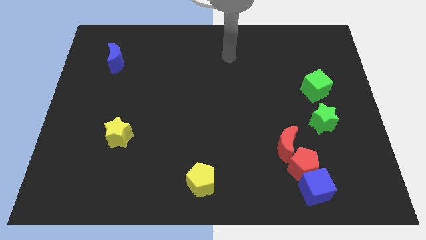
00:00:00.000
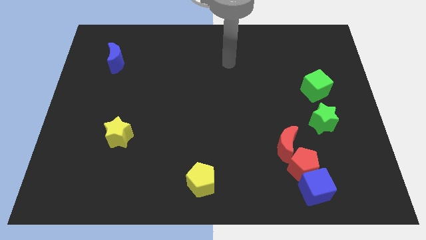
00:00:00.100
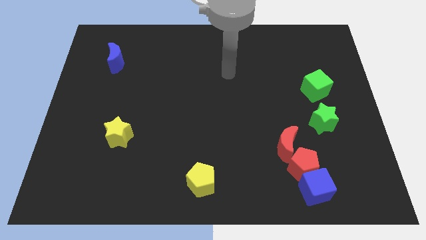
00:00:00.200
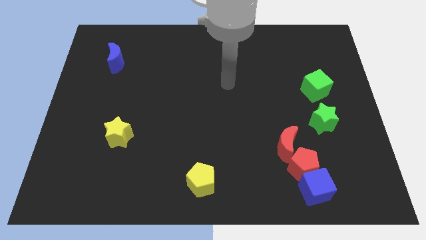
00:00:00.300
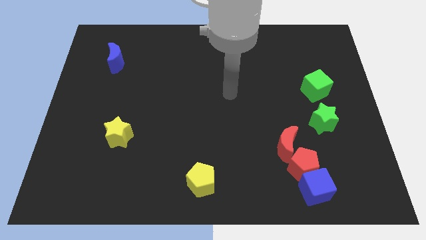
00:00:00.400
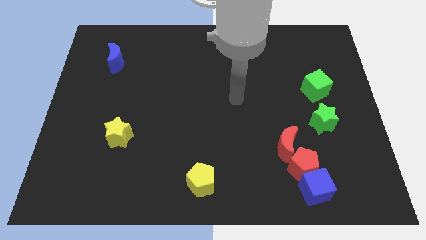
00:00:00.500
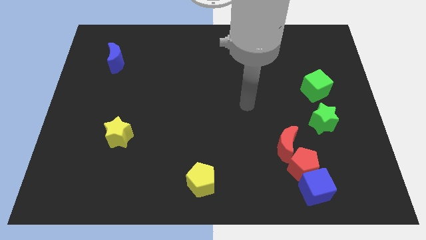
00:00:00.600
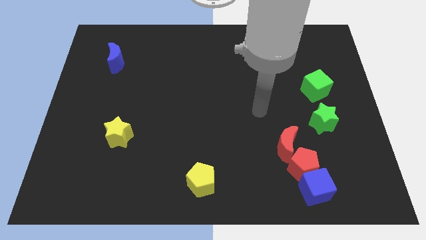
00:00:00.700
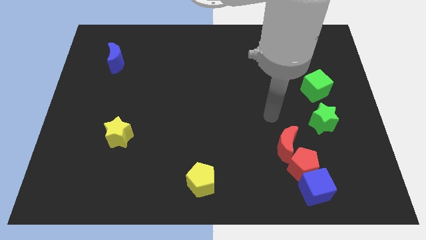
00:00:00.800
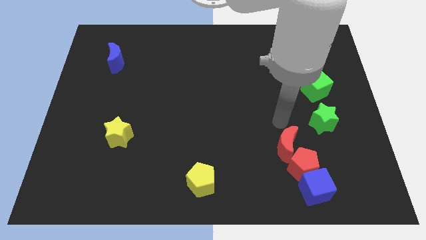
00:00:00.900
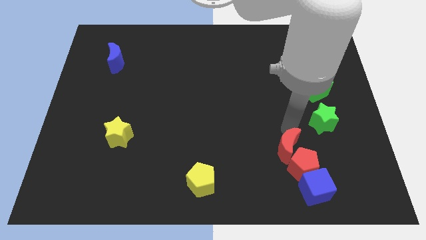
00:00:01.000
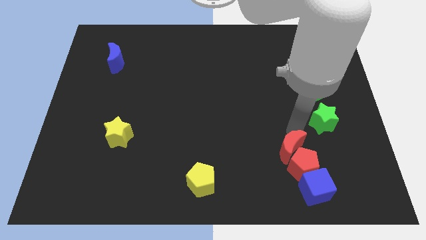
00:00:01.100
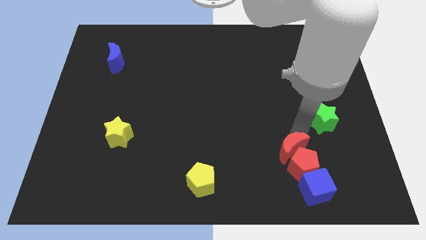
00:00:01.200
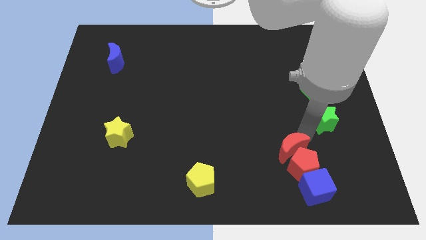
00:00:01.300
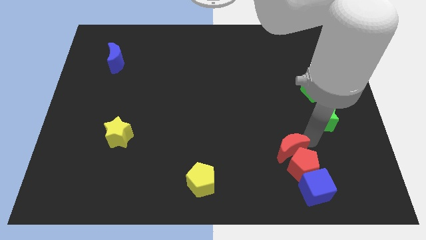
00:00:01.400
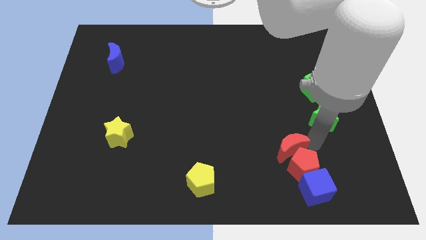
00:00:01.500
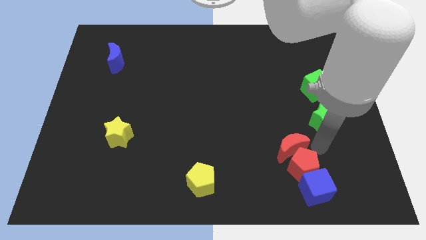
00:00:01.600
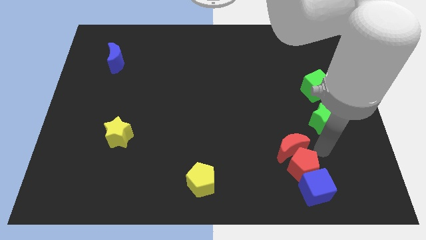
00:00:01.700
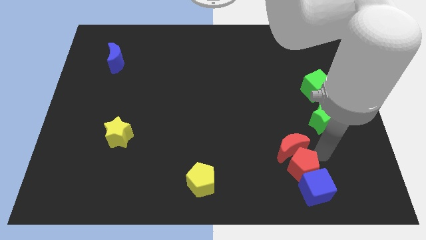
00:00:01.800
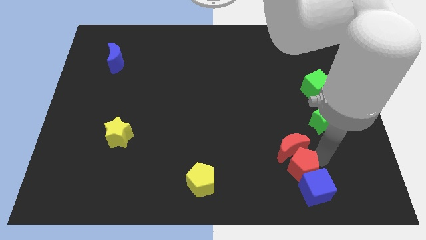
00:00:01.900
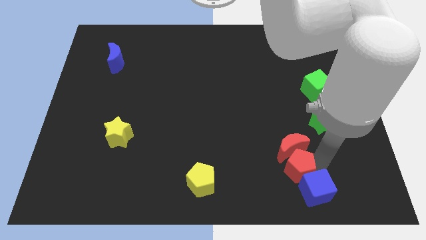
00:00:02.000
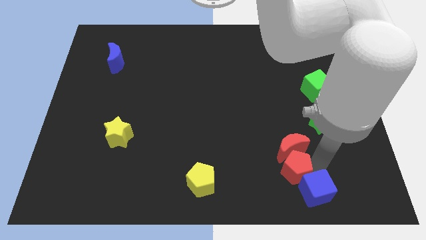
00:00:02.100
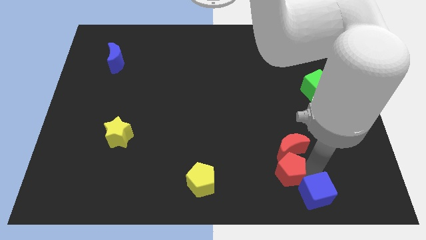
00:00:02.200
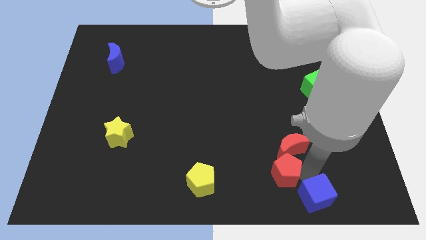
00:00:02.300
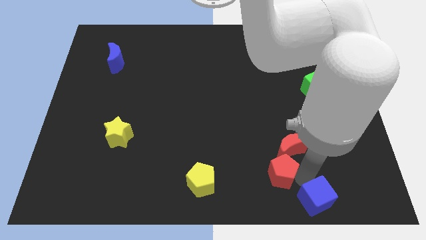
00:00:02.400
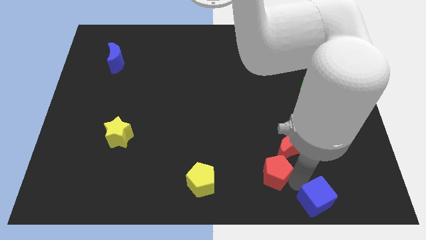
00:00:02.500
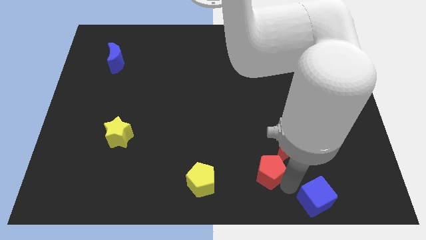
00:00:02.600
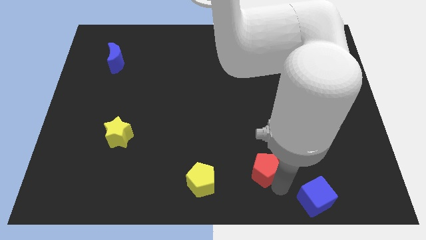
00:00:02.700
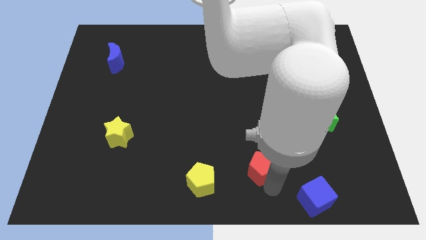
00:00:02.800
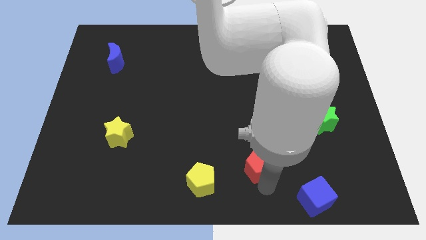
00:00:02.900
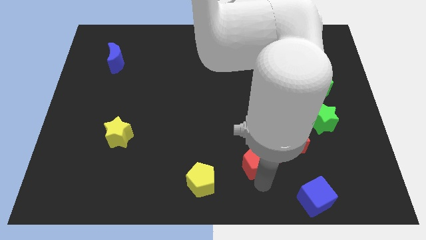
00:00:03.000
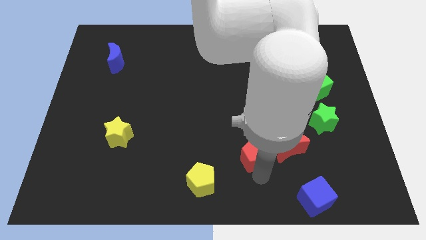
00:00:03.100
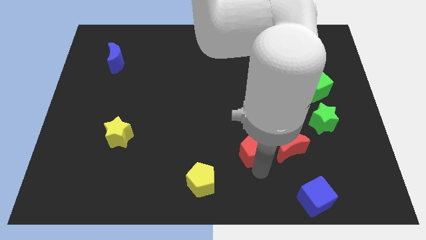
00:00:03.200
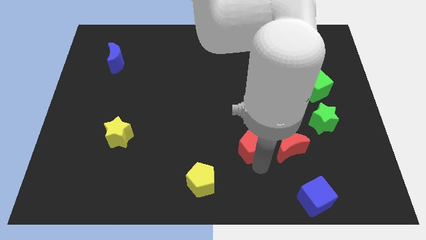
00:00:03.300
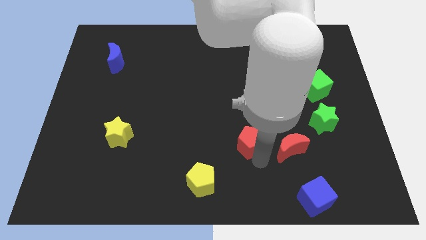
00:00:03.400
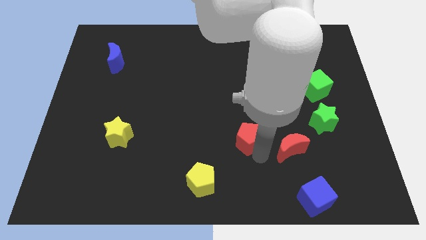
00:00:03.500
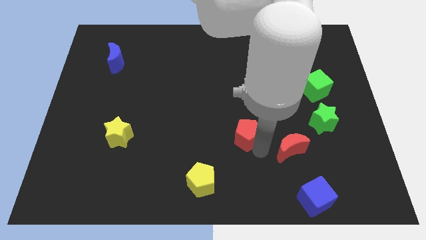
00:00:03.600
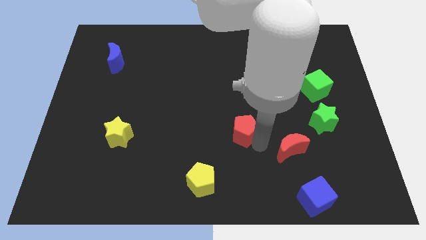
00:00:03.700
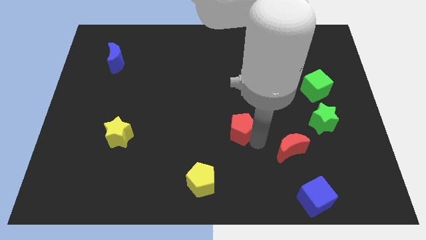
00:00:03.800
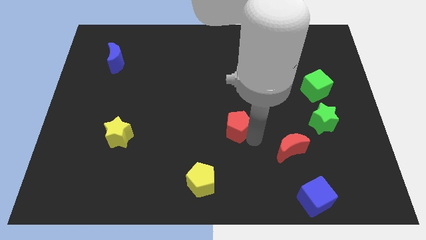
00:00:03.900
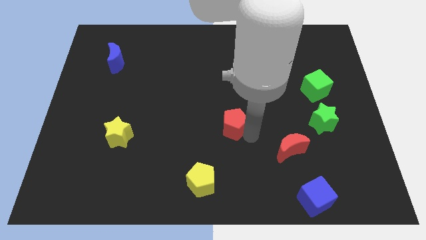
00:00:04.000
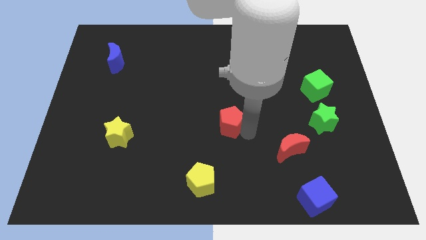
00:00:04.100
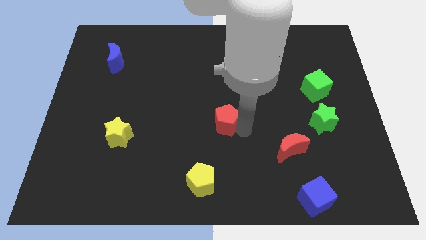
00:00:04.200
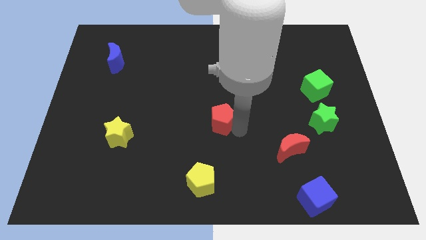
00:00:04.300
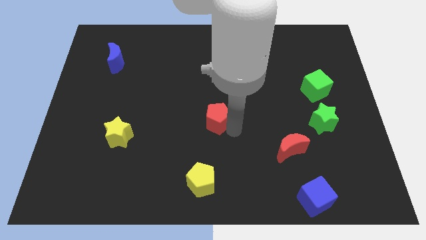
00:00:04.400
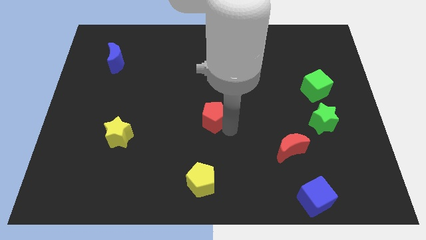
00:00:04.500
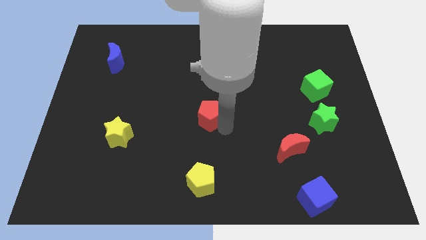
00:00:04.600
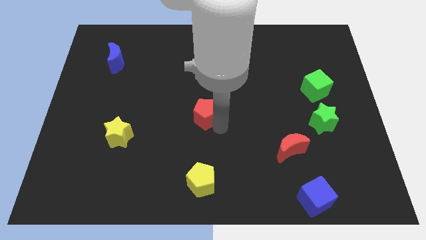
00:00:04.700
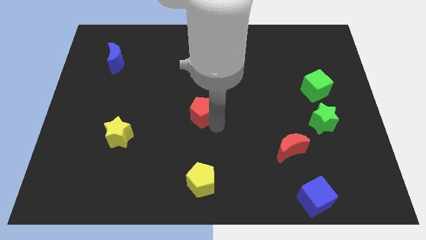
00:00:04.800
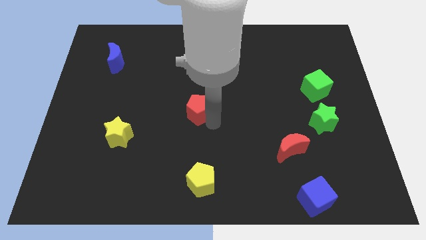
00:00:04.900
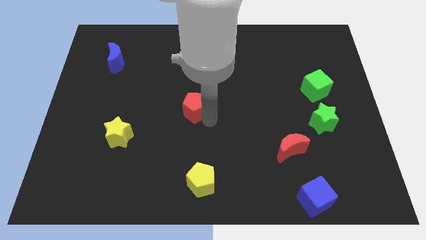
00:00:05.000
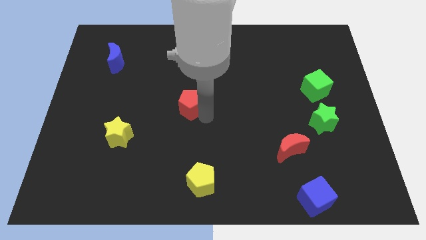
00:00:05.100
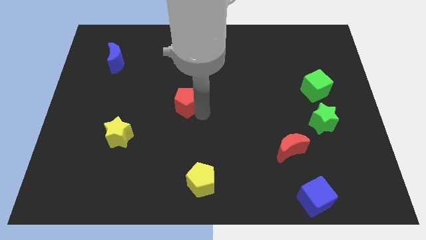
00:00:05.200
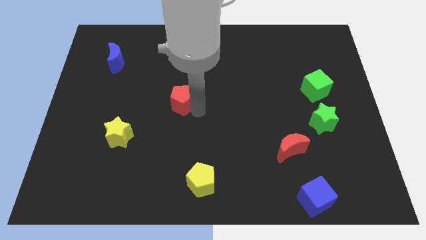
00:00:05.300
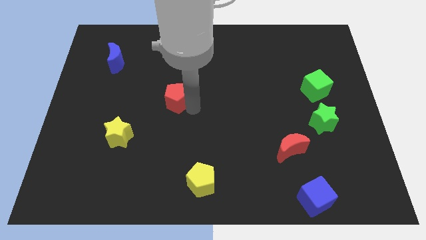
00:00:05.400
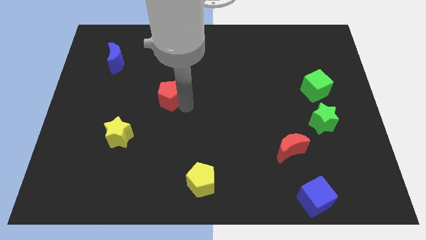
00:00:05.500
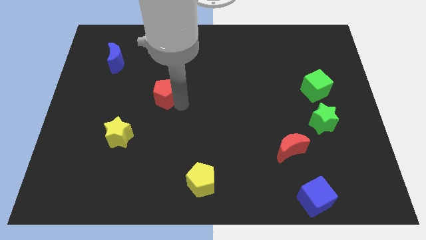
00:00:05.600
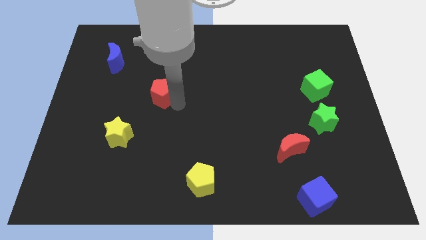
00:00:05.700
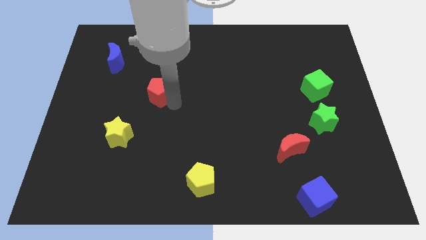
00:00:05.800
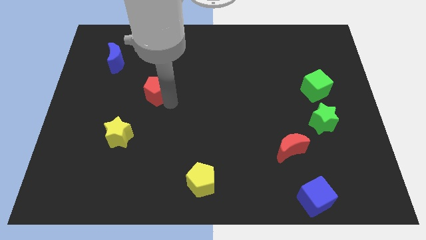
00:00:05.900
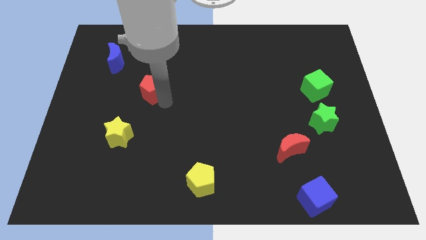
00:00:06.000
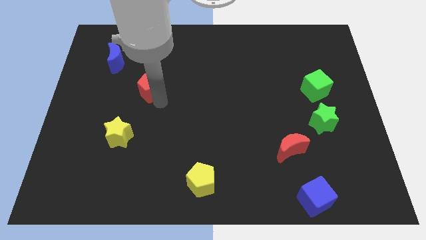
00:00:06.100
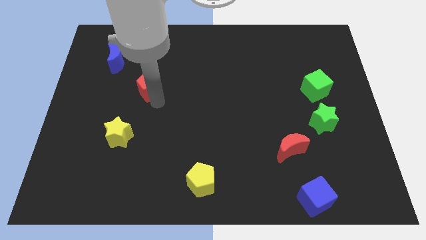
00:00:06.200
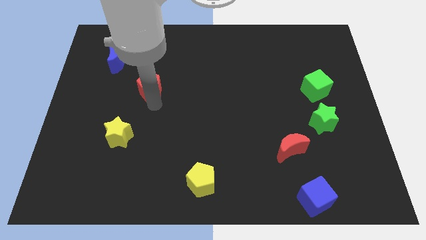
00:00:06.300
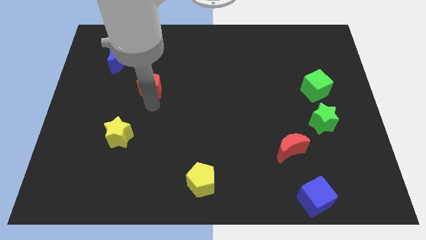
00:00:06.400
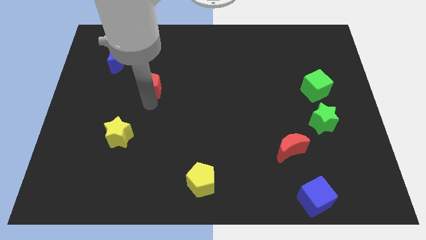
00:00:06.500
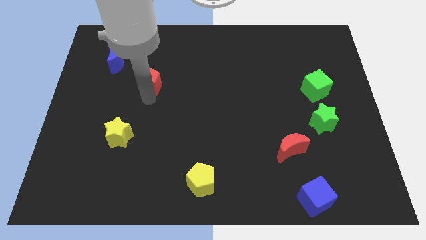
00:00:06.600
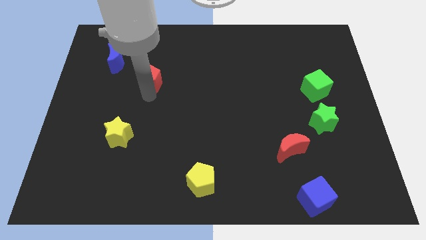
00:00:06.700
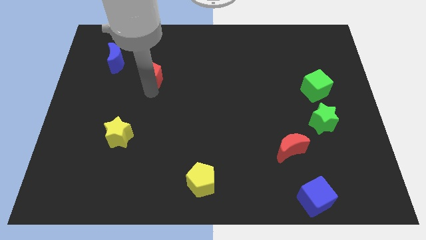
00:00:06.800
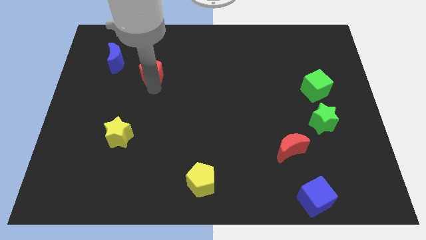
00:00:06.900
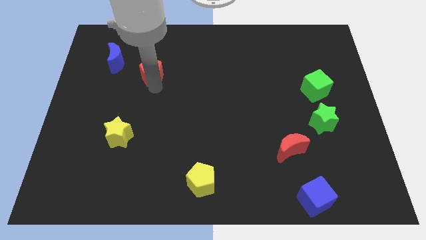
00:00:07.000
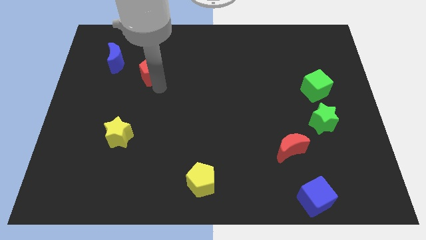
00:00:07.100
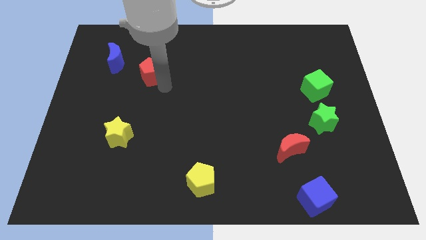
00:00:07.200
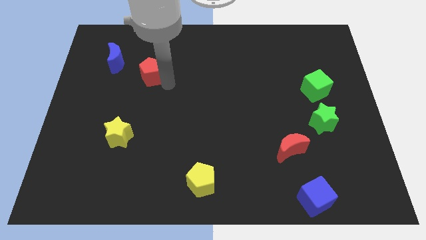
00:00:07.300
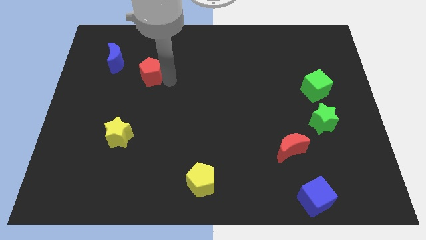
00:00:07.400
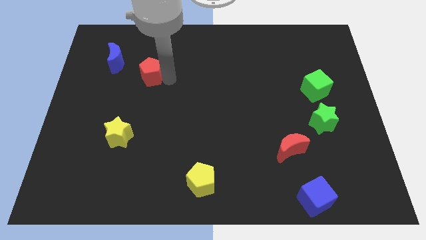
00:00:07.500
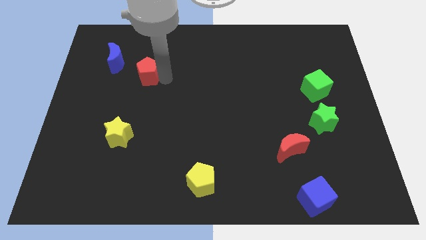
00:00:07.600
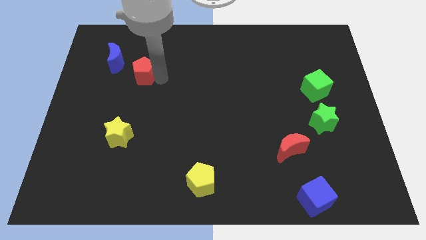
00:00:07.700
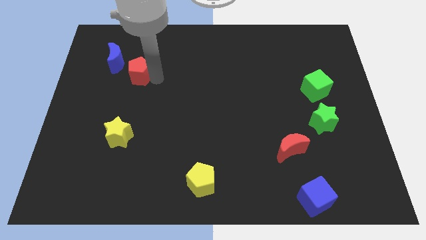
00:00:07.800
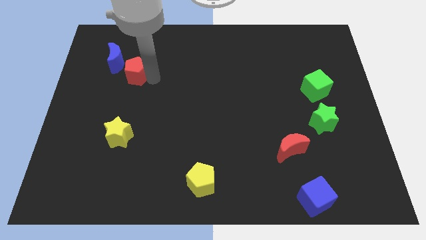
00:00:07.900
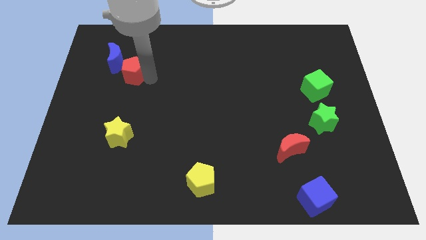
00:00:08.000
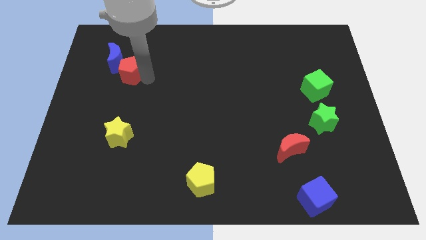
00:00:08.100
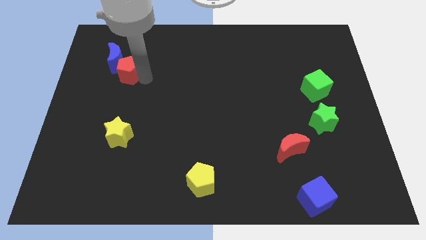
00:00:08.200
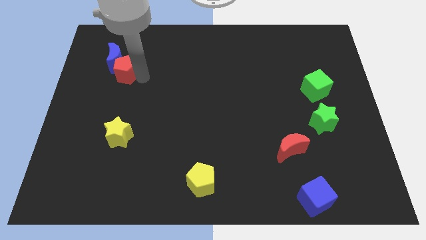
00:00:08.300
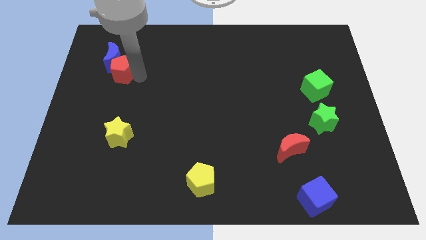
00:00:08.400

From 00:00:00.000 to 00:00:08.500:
slide the red pentagon to the blue moon
